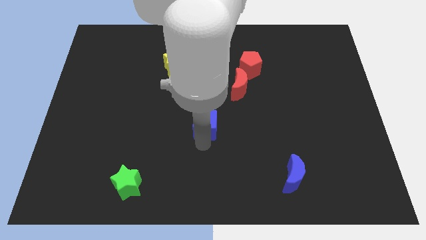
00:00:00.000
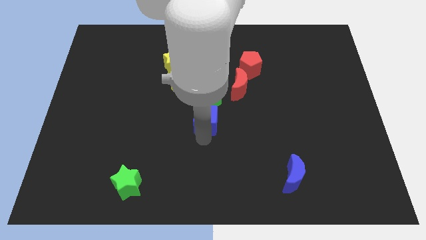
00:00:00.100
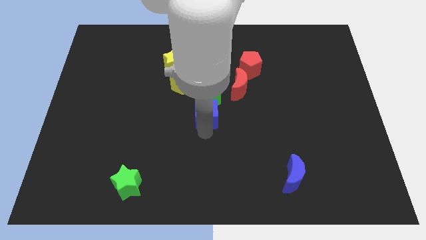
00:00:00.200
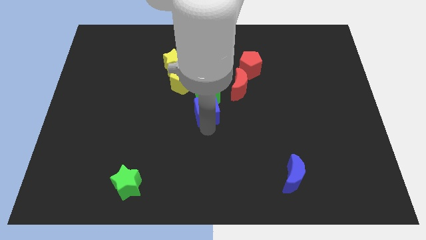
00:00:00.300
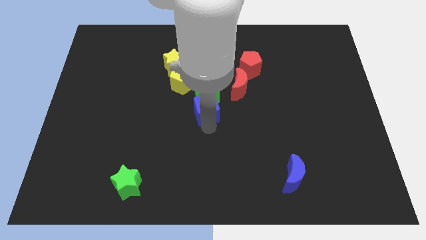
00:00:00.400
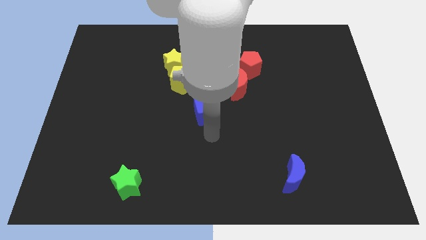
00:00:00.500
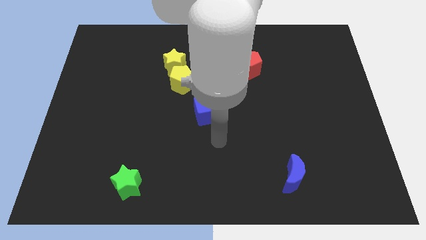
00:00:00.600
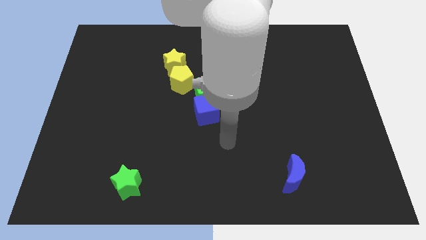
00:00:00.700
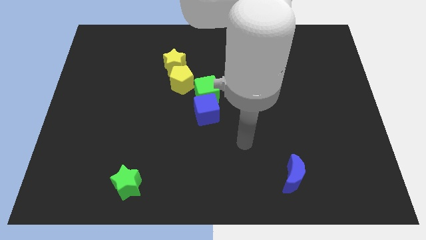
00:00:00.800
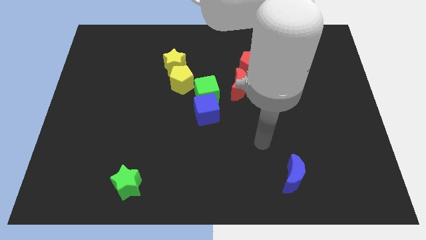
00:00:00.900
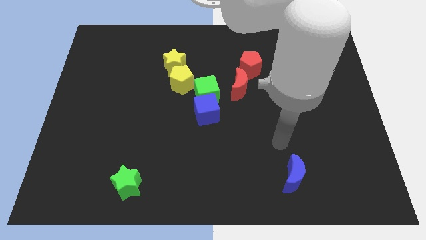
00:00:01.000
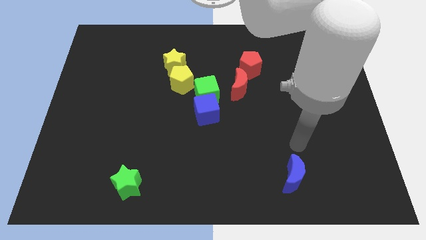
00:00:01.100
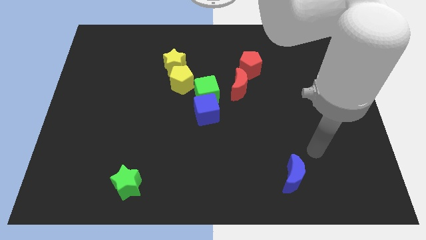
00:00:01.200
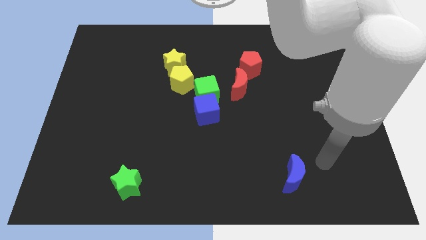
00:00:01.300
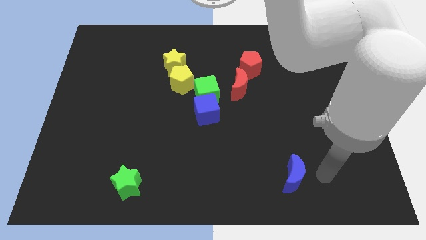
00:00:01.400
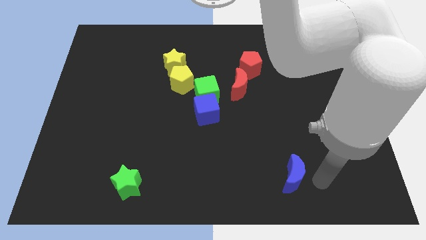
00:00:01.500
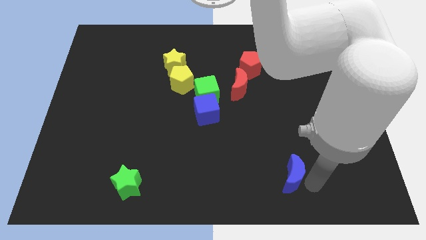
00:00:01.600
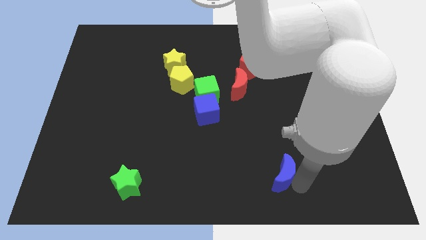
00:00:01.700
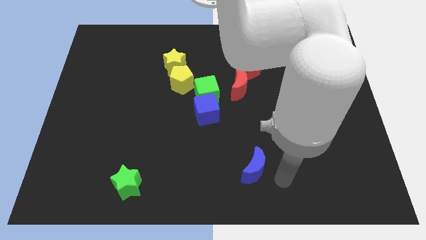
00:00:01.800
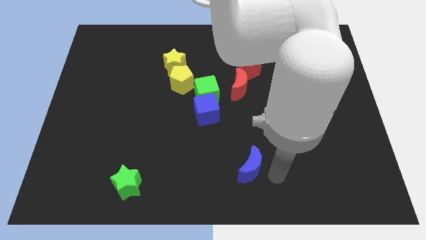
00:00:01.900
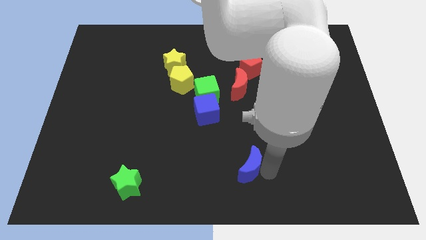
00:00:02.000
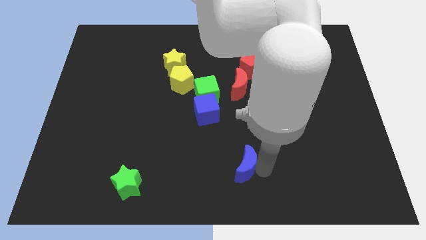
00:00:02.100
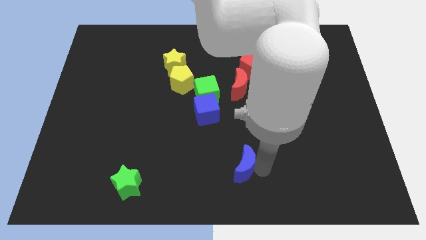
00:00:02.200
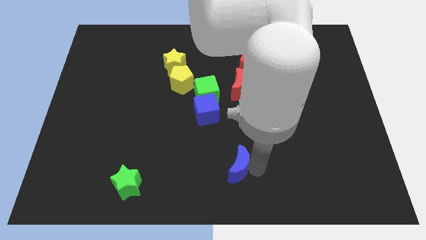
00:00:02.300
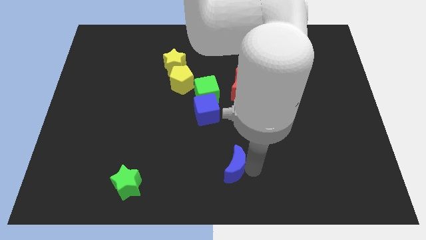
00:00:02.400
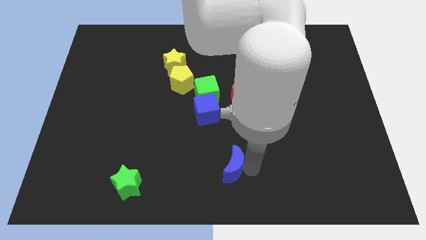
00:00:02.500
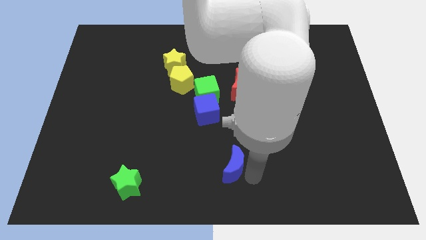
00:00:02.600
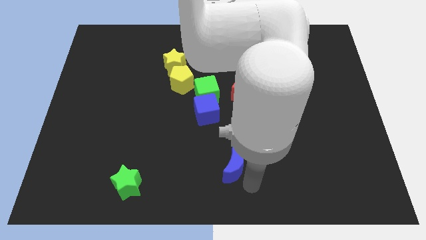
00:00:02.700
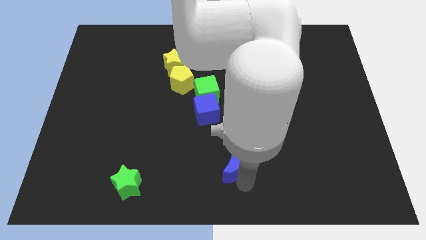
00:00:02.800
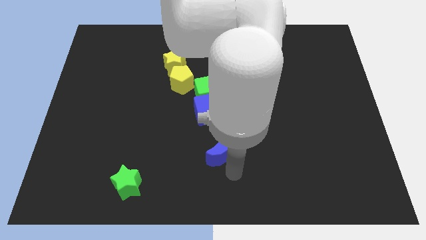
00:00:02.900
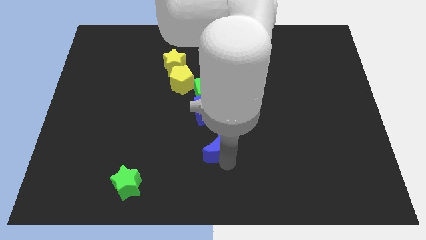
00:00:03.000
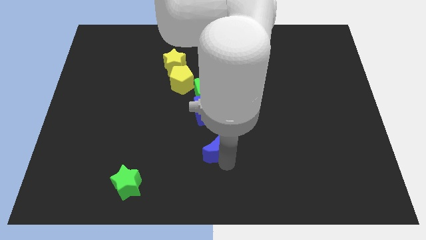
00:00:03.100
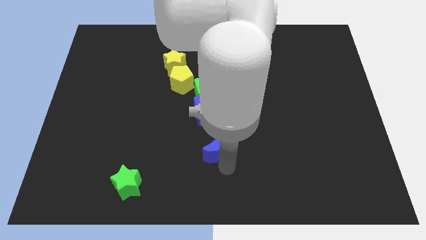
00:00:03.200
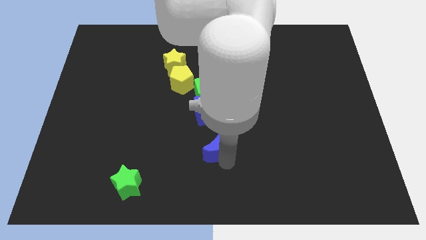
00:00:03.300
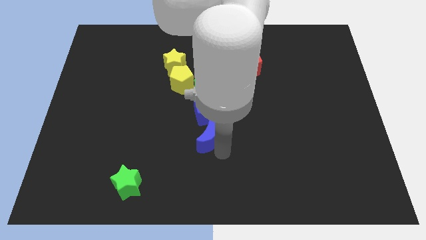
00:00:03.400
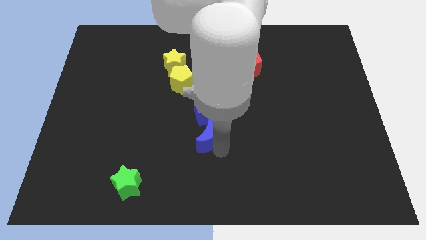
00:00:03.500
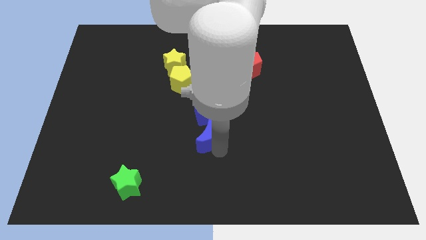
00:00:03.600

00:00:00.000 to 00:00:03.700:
place the blue moon to the bottom side of the blue cube

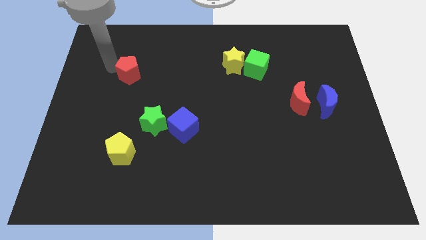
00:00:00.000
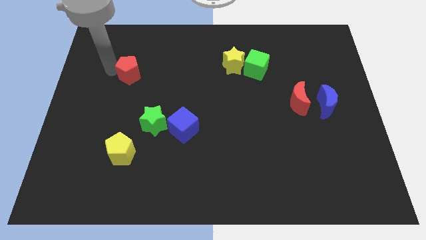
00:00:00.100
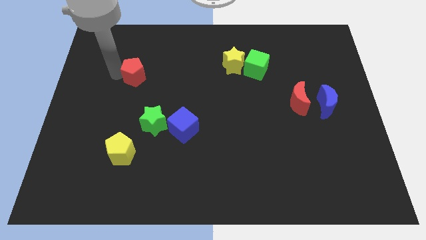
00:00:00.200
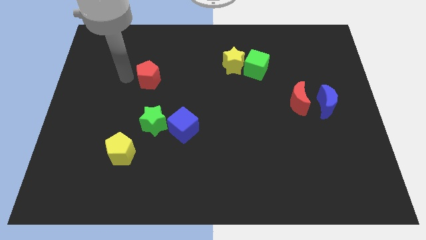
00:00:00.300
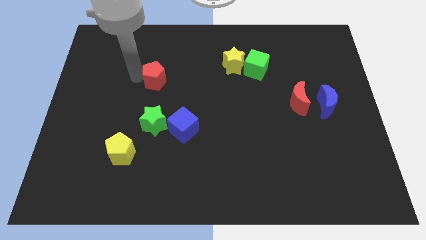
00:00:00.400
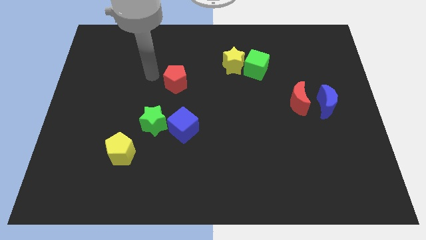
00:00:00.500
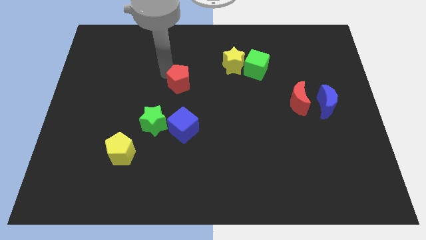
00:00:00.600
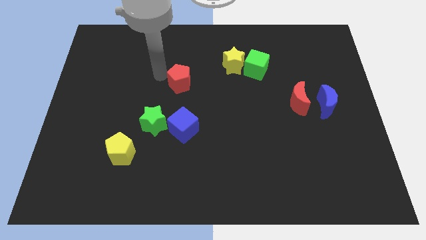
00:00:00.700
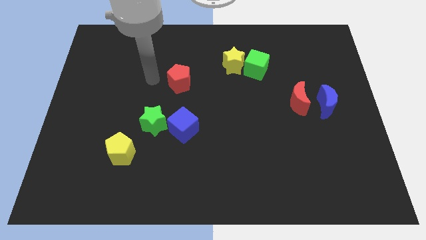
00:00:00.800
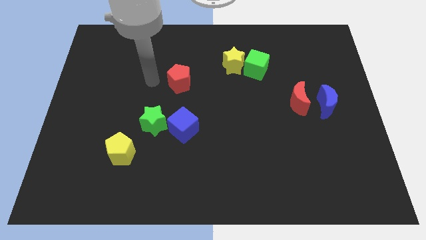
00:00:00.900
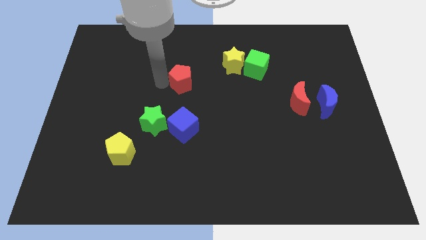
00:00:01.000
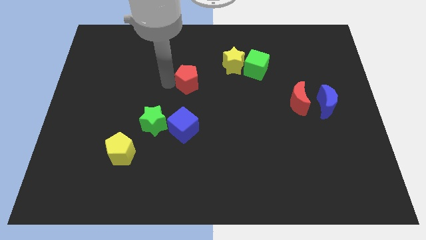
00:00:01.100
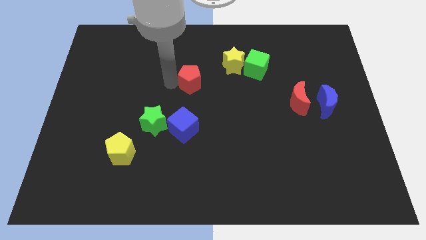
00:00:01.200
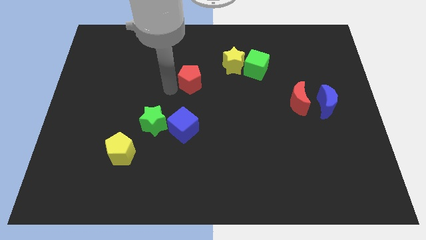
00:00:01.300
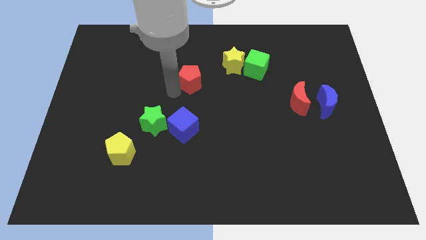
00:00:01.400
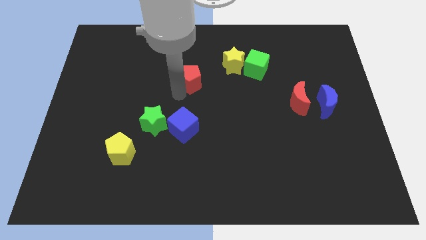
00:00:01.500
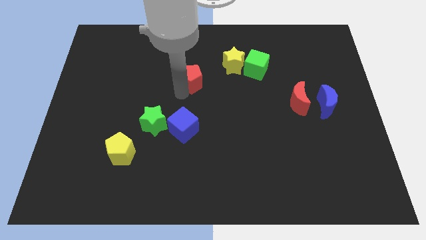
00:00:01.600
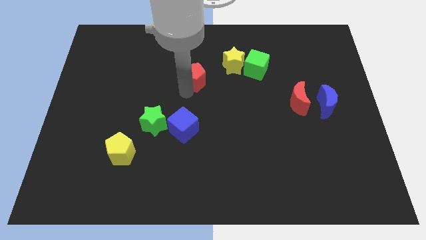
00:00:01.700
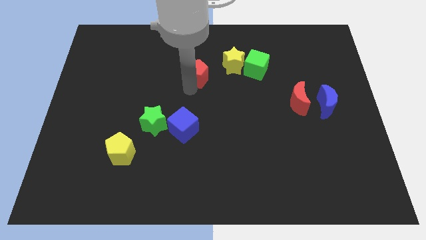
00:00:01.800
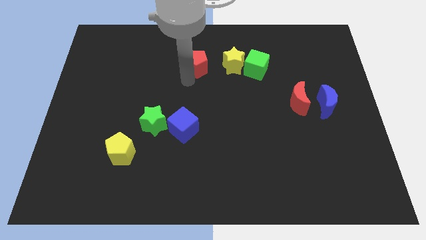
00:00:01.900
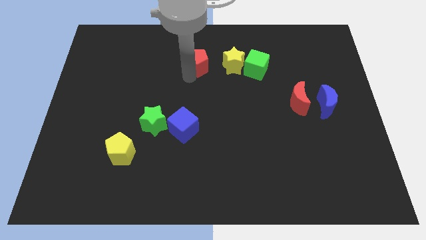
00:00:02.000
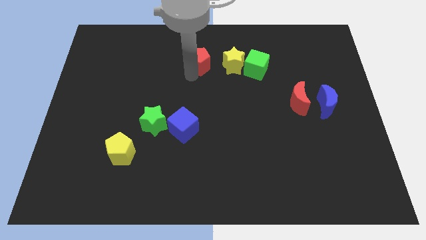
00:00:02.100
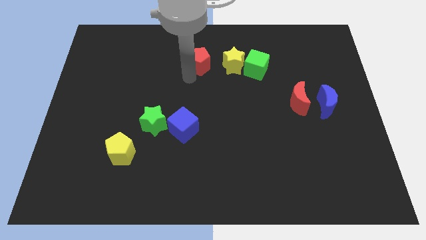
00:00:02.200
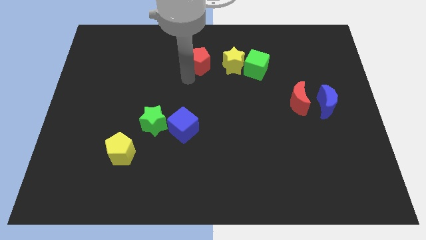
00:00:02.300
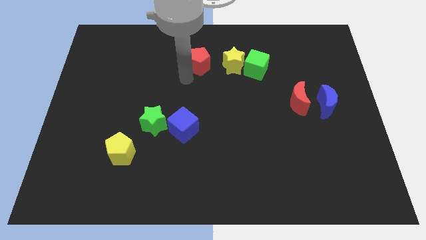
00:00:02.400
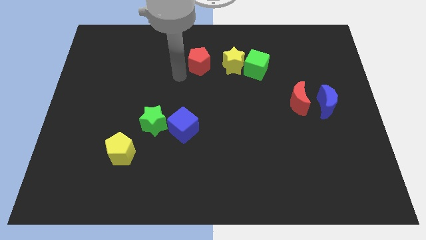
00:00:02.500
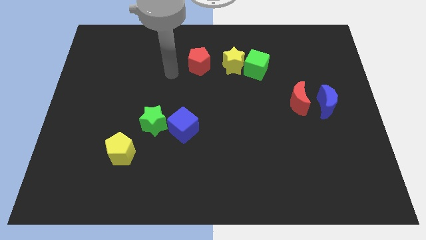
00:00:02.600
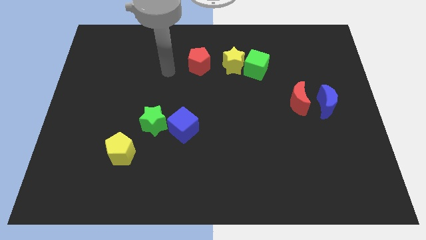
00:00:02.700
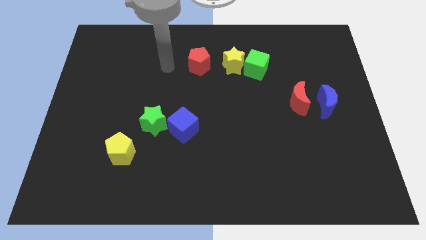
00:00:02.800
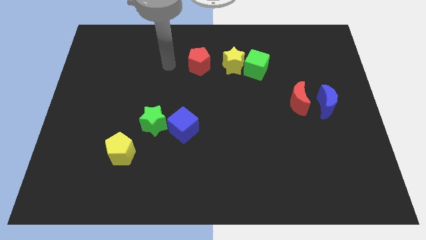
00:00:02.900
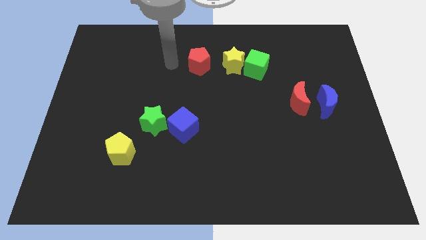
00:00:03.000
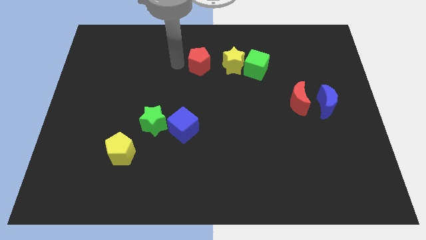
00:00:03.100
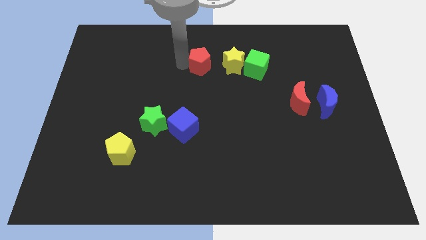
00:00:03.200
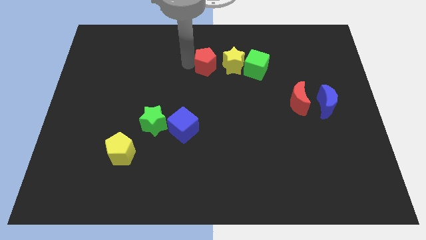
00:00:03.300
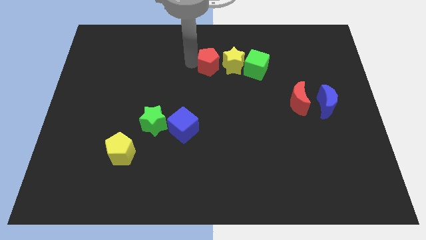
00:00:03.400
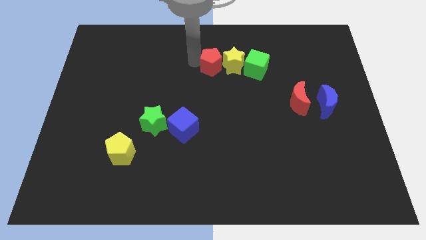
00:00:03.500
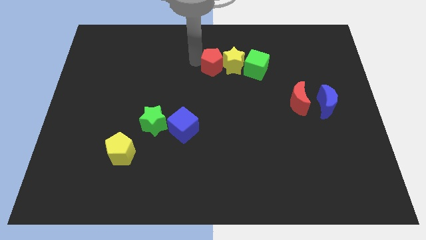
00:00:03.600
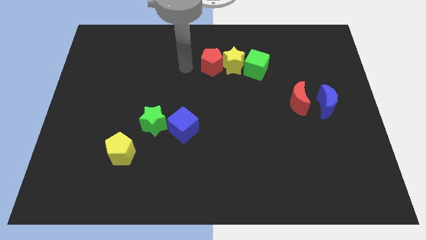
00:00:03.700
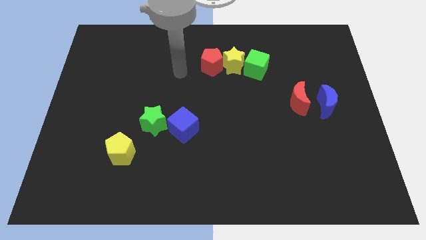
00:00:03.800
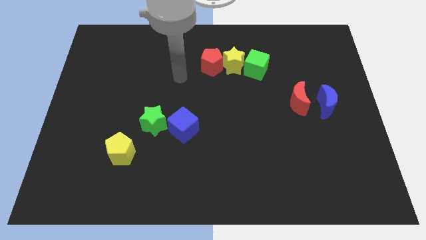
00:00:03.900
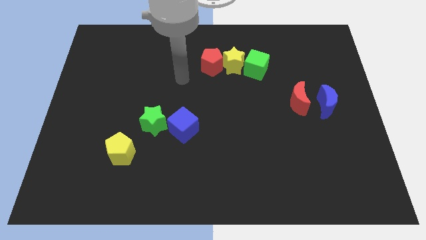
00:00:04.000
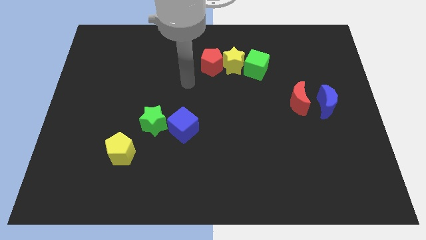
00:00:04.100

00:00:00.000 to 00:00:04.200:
move red pentagon into the yellow star

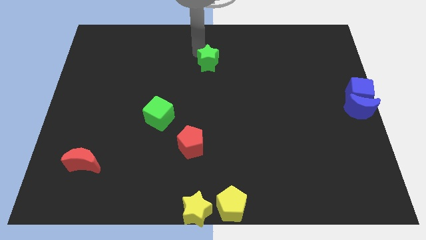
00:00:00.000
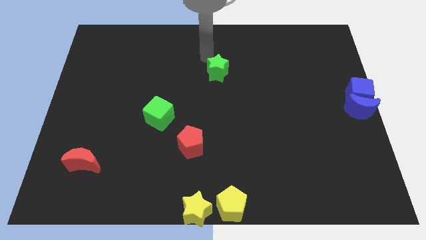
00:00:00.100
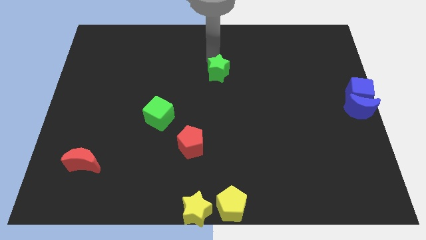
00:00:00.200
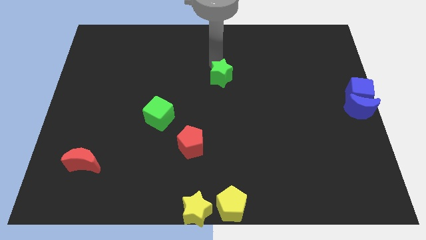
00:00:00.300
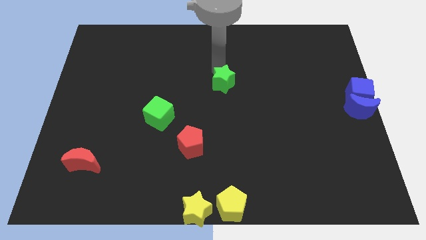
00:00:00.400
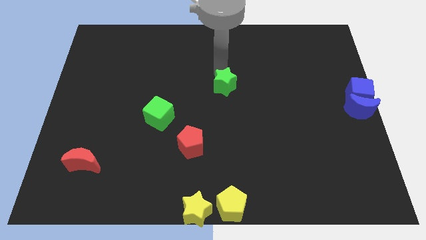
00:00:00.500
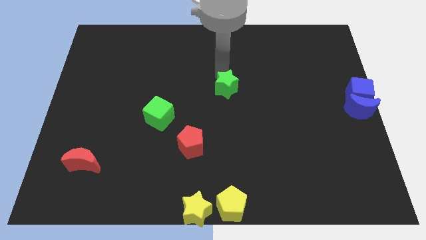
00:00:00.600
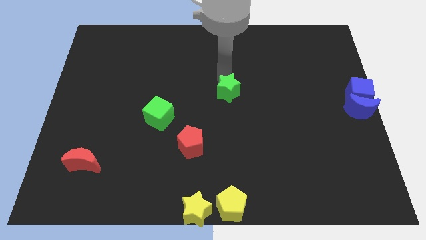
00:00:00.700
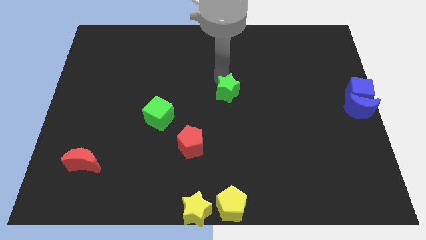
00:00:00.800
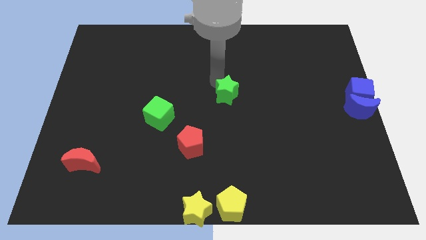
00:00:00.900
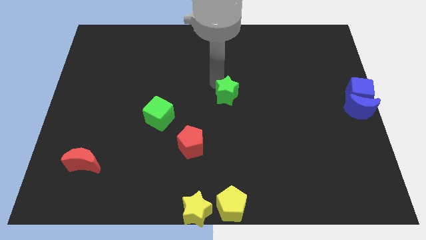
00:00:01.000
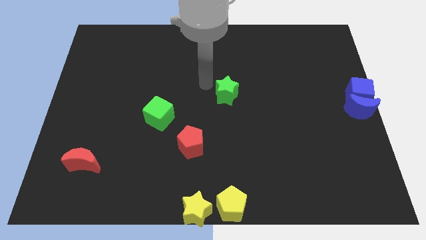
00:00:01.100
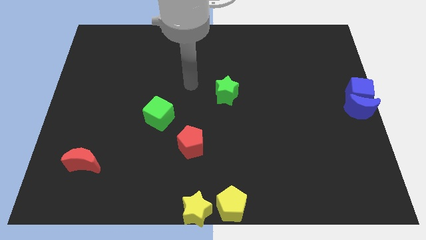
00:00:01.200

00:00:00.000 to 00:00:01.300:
move the green star to the center on the board
